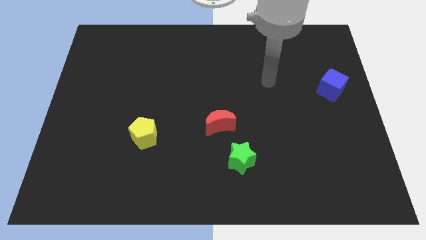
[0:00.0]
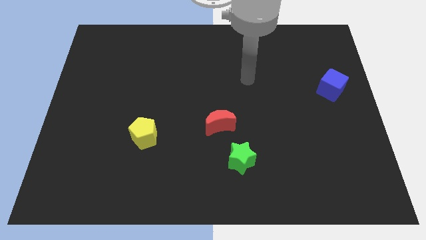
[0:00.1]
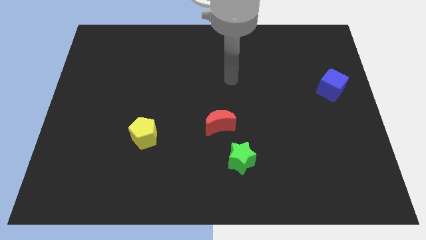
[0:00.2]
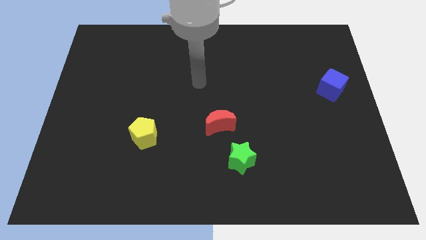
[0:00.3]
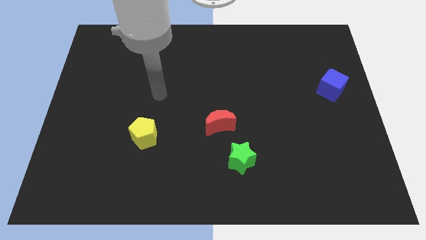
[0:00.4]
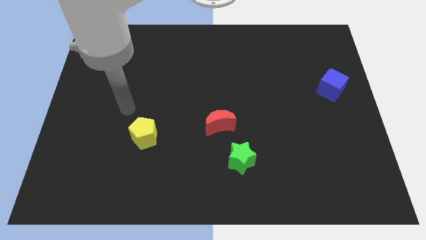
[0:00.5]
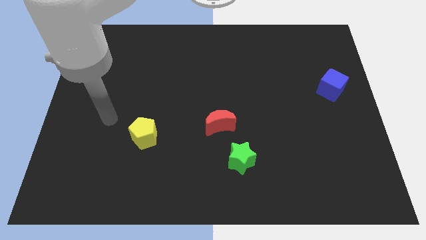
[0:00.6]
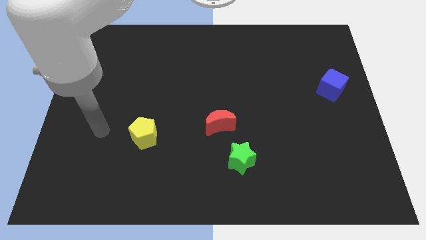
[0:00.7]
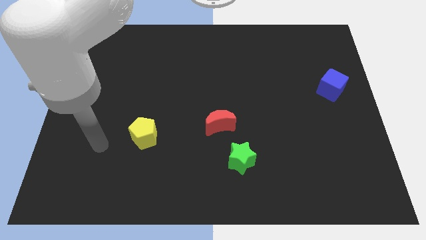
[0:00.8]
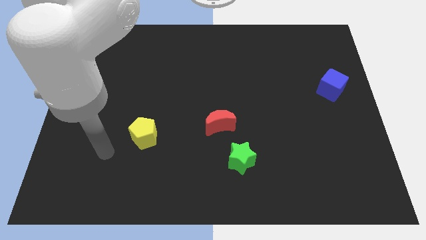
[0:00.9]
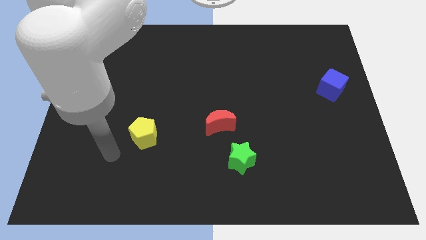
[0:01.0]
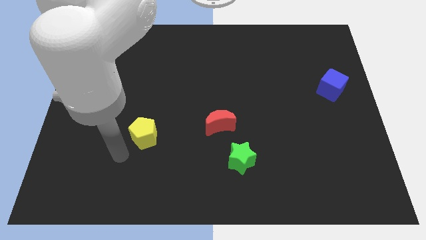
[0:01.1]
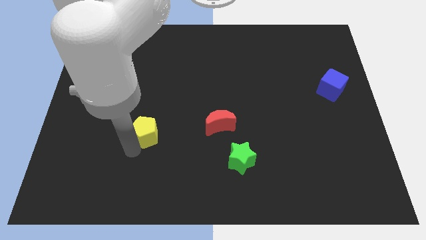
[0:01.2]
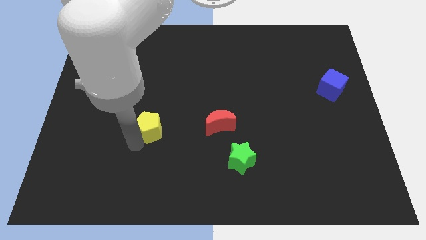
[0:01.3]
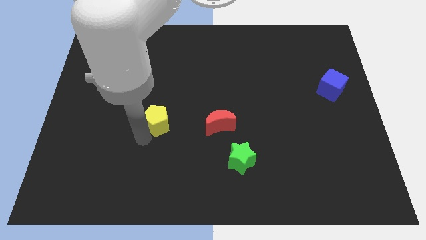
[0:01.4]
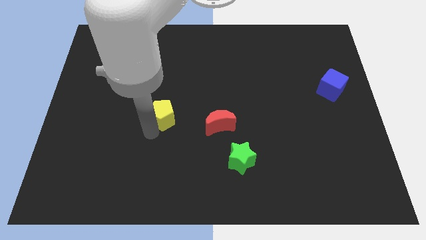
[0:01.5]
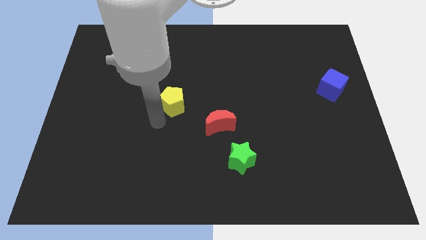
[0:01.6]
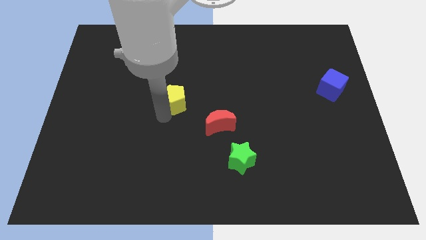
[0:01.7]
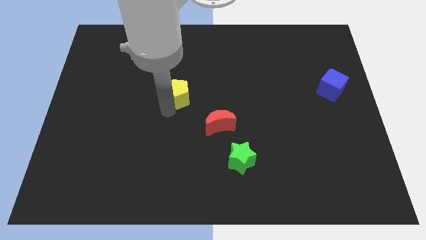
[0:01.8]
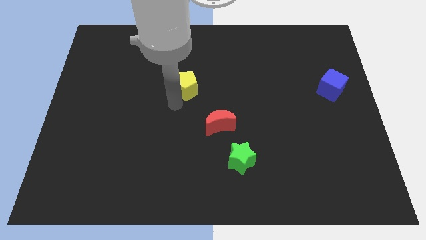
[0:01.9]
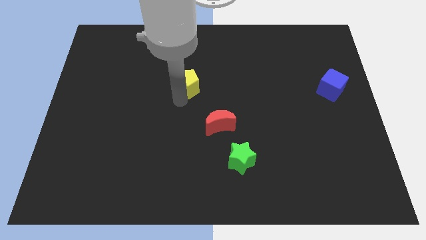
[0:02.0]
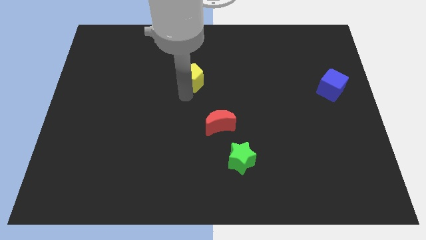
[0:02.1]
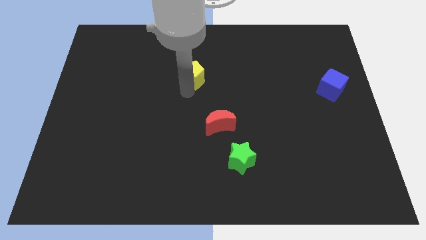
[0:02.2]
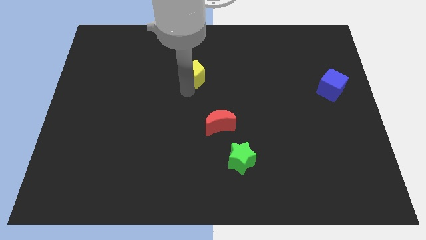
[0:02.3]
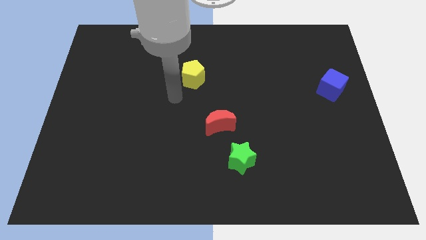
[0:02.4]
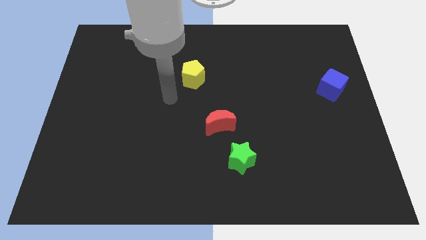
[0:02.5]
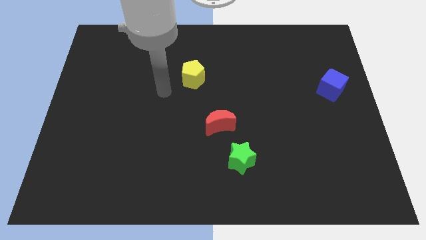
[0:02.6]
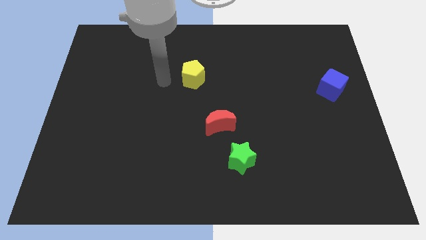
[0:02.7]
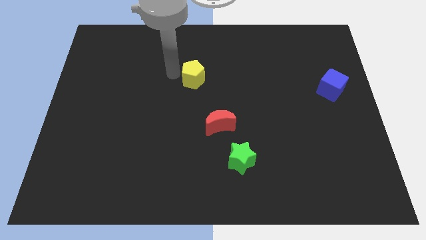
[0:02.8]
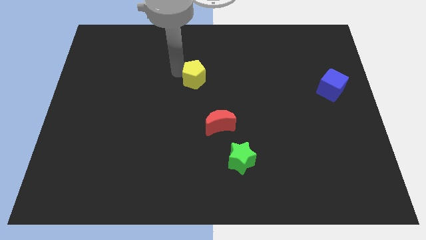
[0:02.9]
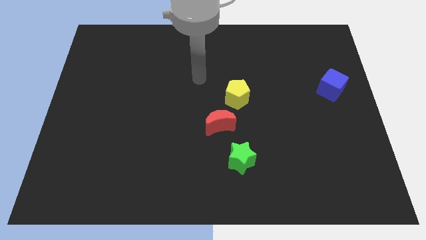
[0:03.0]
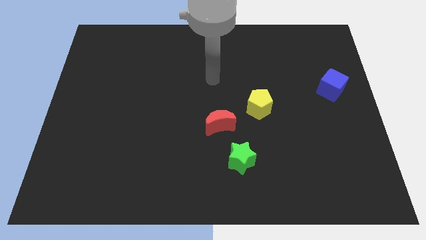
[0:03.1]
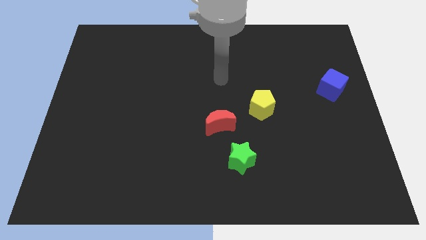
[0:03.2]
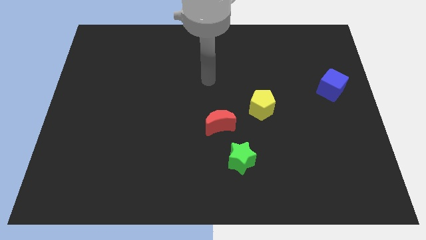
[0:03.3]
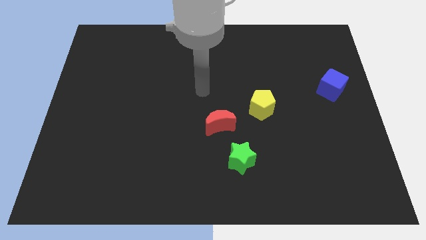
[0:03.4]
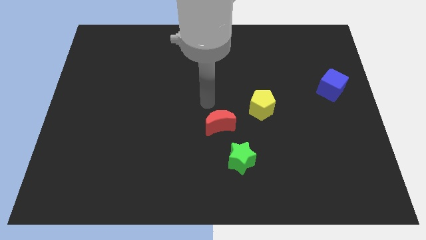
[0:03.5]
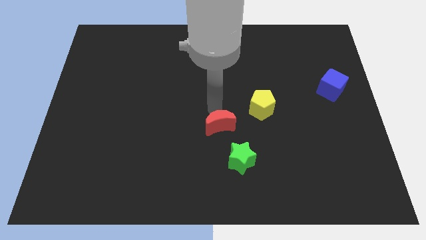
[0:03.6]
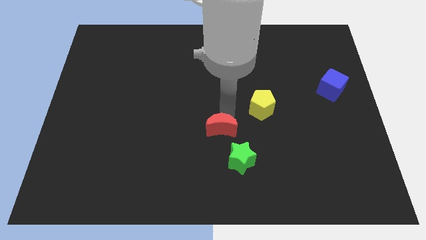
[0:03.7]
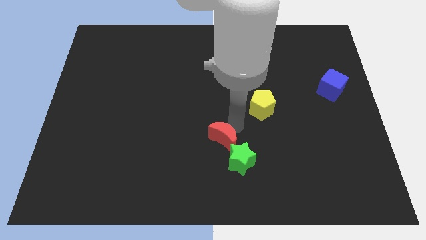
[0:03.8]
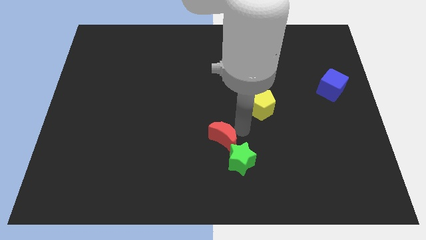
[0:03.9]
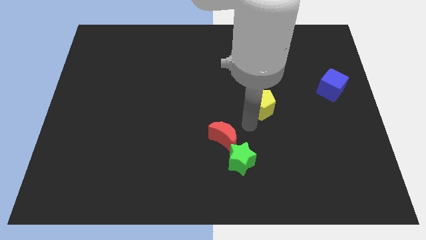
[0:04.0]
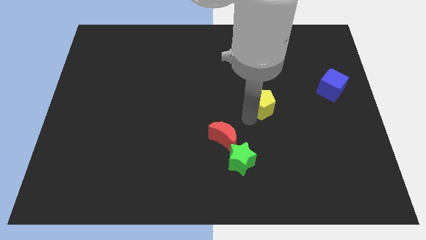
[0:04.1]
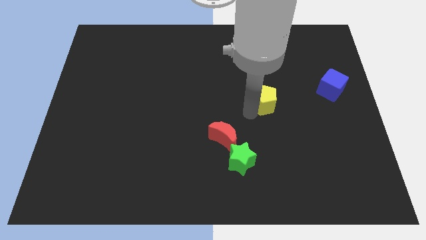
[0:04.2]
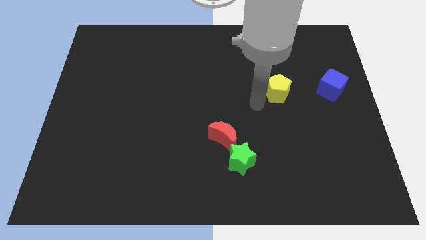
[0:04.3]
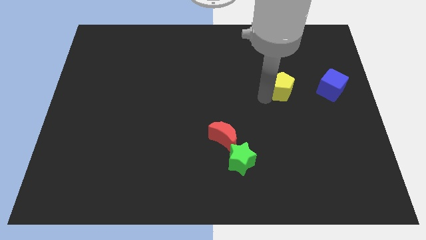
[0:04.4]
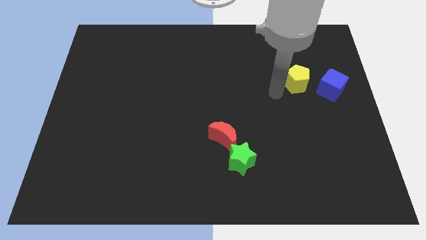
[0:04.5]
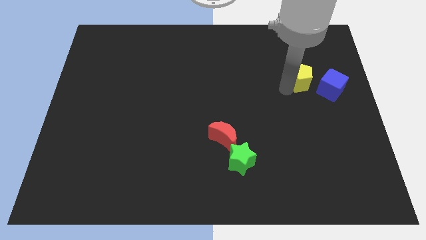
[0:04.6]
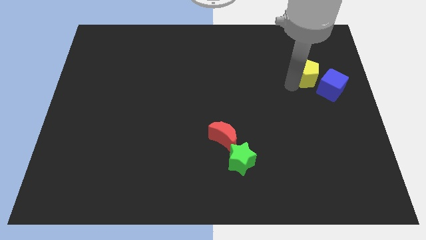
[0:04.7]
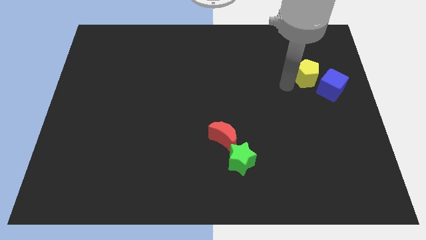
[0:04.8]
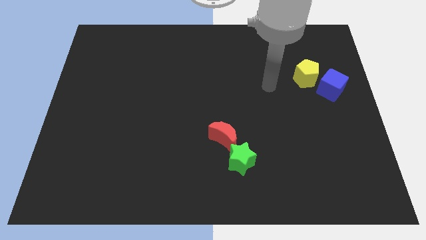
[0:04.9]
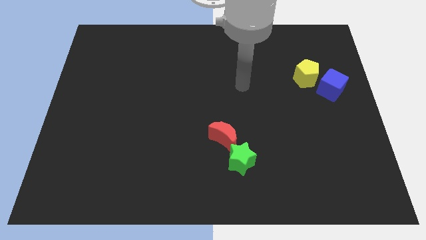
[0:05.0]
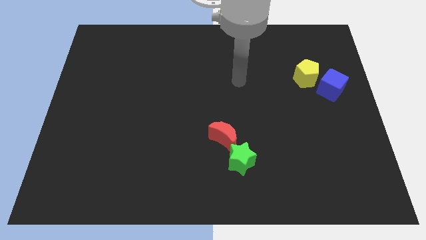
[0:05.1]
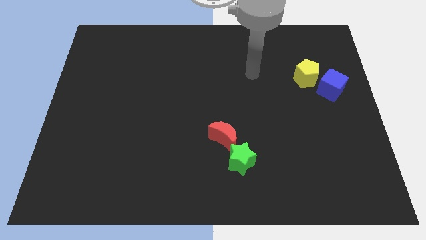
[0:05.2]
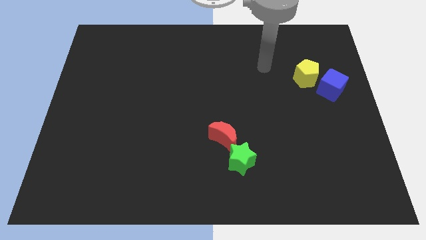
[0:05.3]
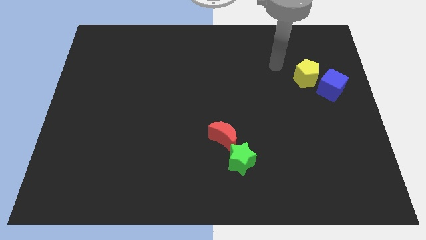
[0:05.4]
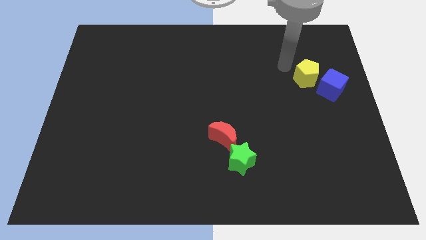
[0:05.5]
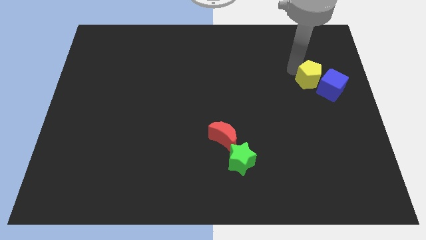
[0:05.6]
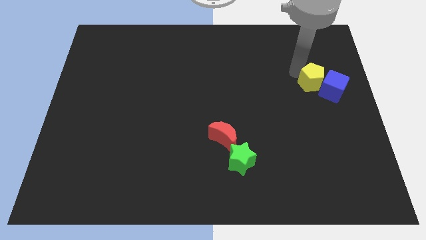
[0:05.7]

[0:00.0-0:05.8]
push the yellow block close to the blue block

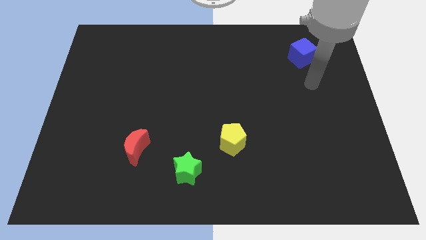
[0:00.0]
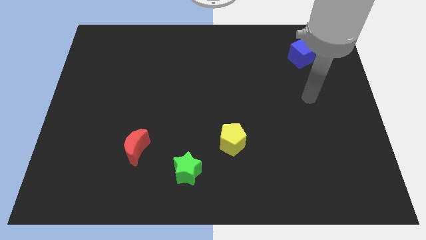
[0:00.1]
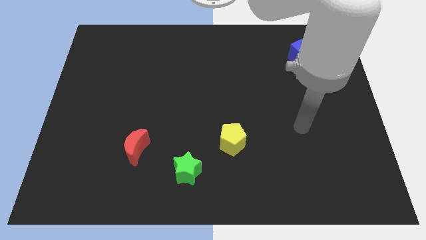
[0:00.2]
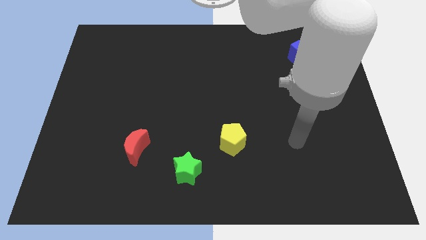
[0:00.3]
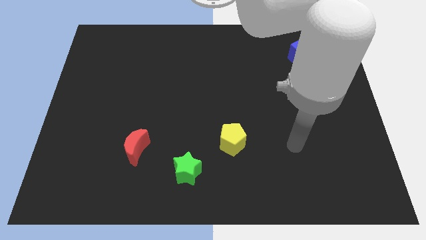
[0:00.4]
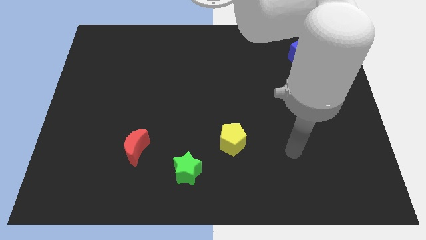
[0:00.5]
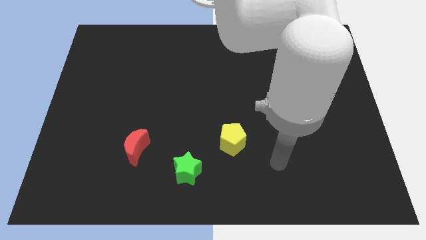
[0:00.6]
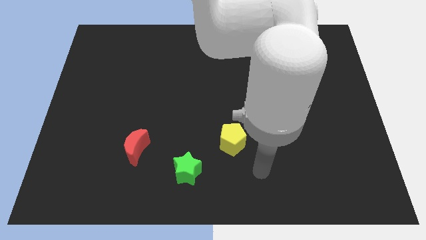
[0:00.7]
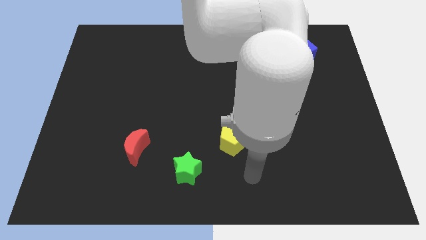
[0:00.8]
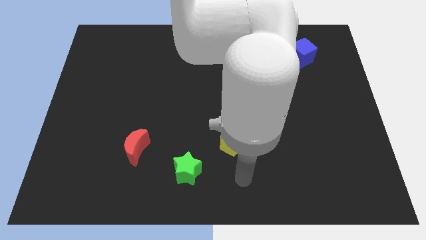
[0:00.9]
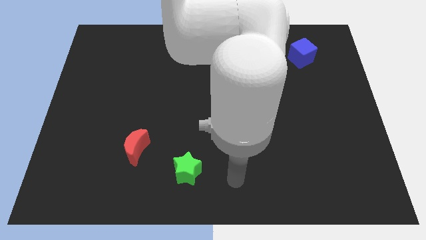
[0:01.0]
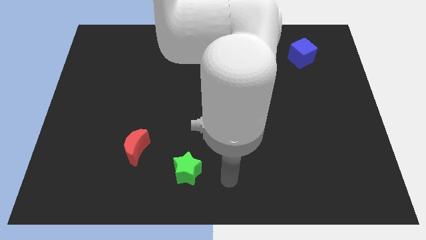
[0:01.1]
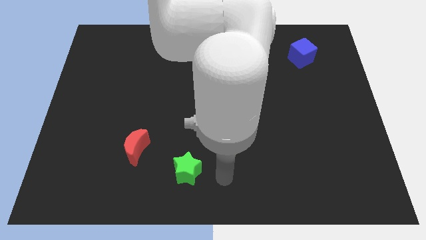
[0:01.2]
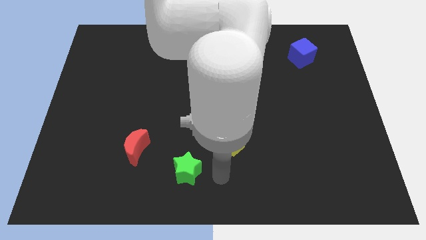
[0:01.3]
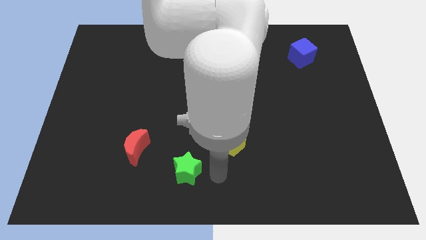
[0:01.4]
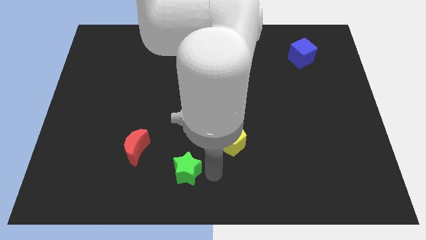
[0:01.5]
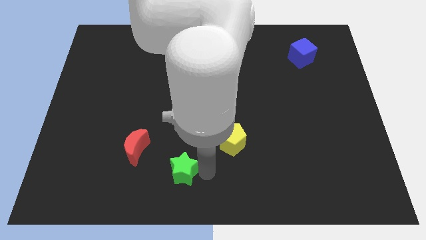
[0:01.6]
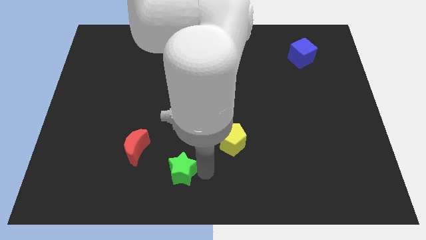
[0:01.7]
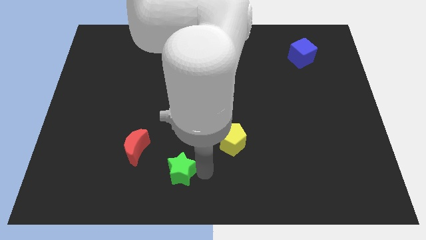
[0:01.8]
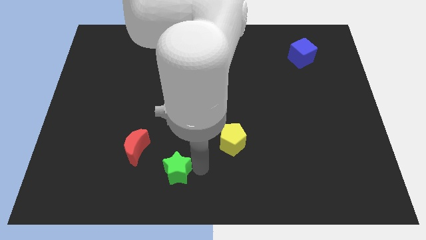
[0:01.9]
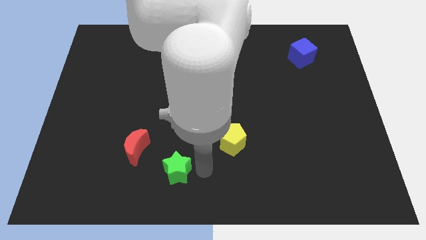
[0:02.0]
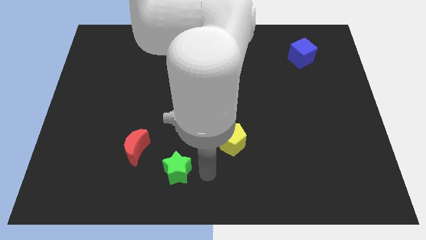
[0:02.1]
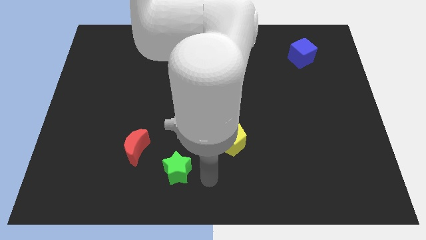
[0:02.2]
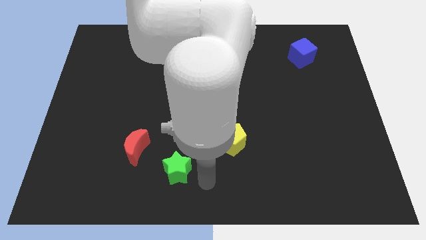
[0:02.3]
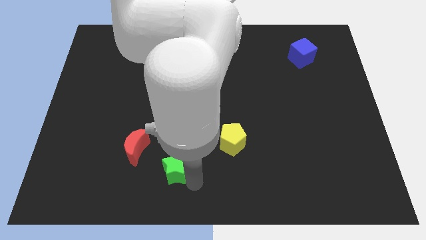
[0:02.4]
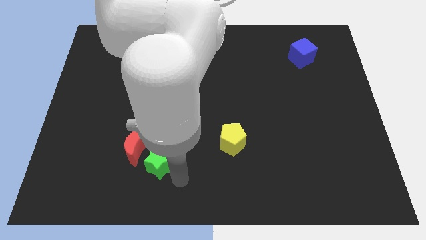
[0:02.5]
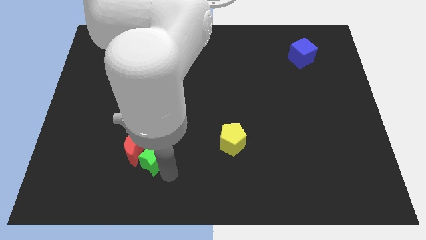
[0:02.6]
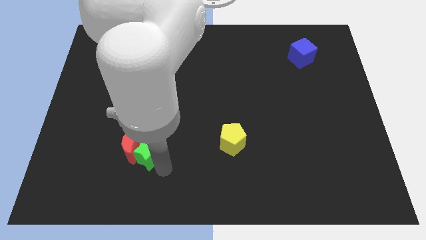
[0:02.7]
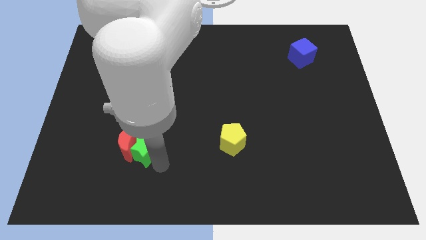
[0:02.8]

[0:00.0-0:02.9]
put the green star next to the red block
